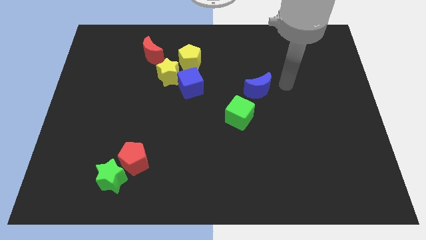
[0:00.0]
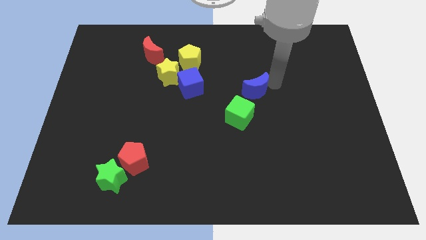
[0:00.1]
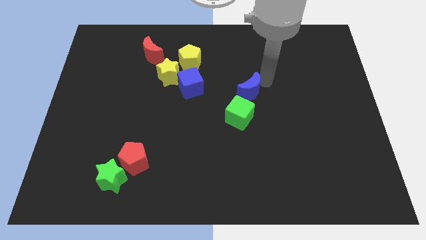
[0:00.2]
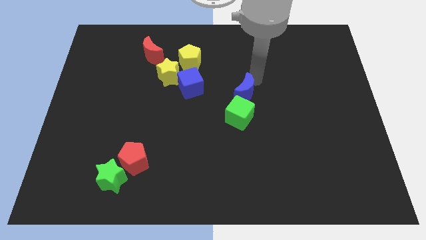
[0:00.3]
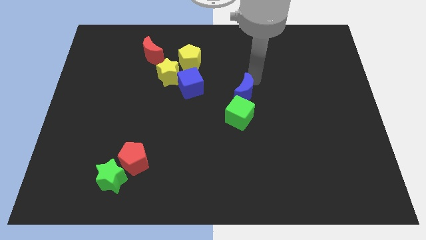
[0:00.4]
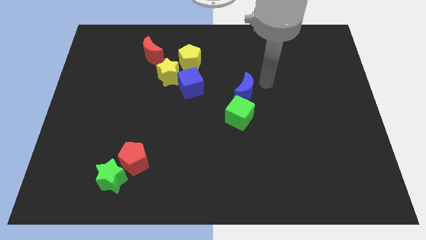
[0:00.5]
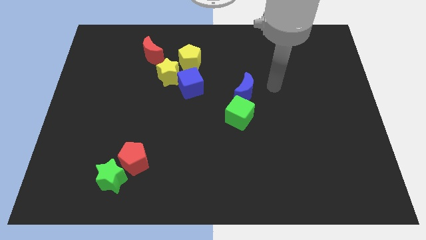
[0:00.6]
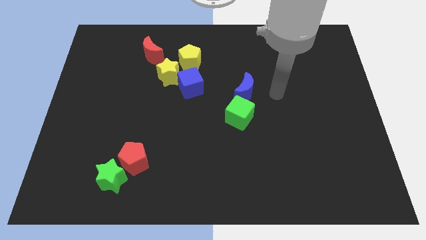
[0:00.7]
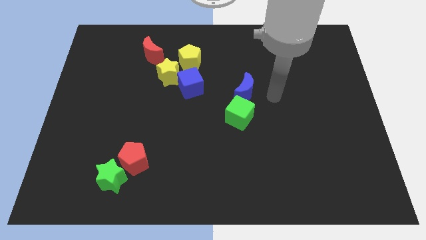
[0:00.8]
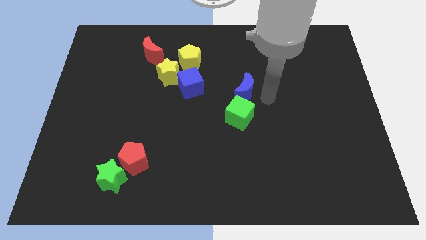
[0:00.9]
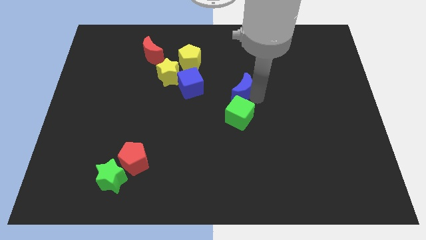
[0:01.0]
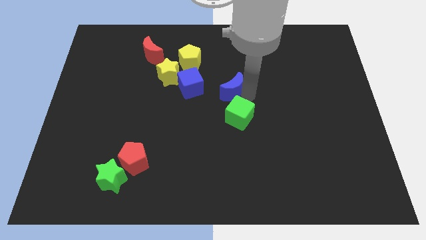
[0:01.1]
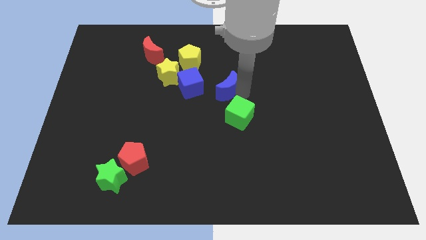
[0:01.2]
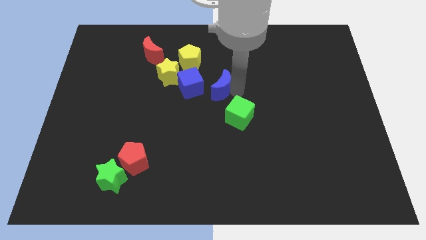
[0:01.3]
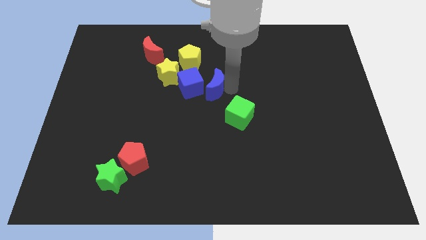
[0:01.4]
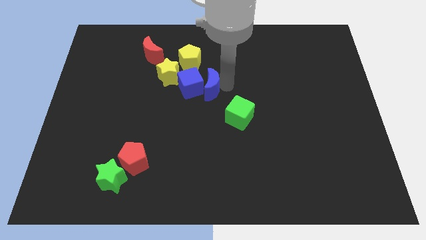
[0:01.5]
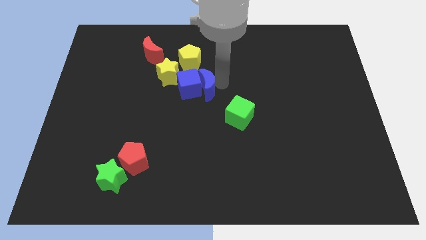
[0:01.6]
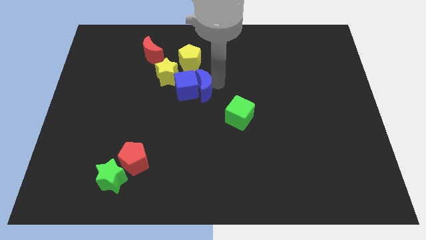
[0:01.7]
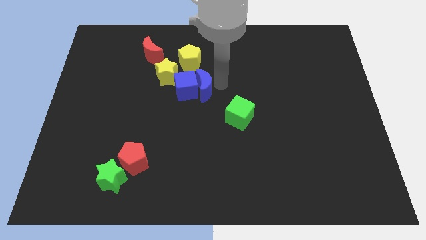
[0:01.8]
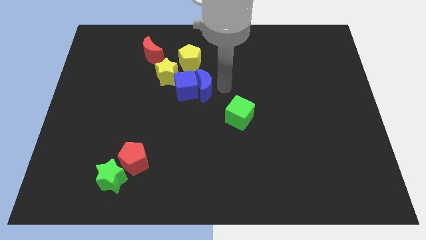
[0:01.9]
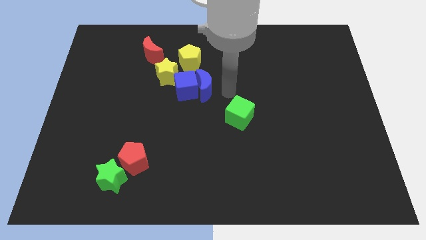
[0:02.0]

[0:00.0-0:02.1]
push blue moon close to the blue cube

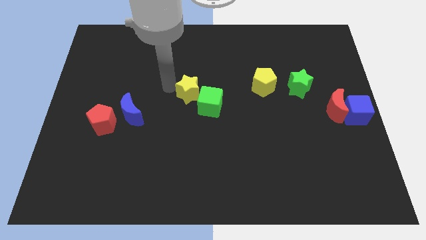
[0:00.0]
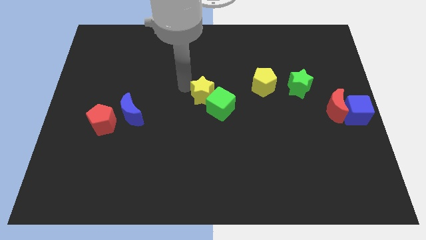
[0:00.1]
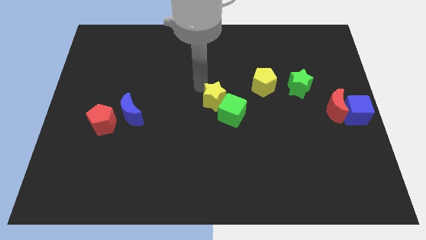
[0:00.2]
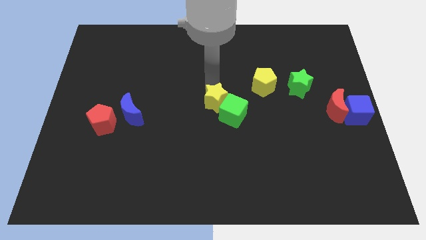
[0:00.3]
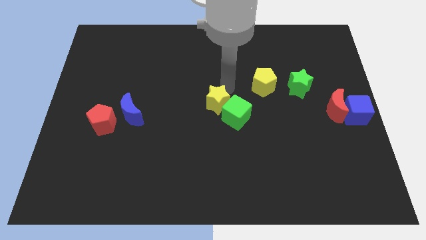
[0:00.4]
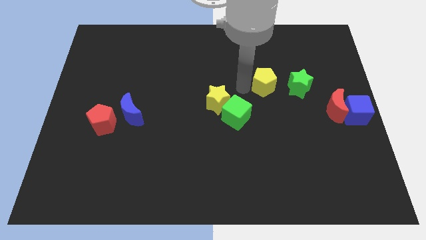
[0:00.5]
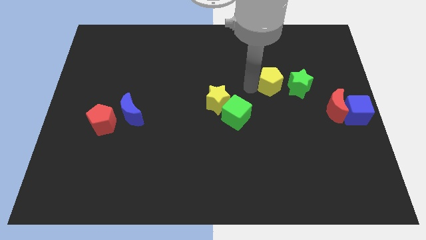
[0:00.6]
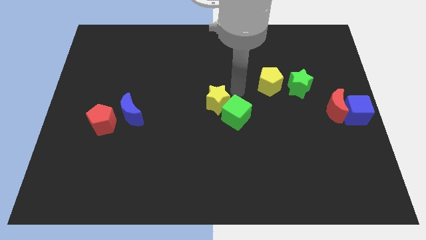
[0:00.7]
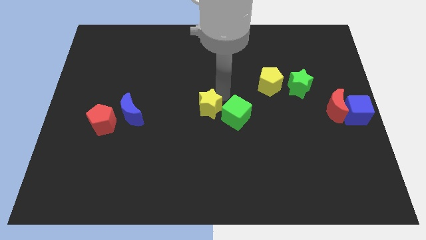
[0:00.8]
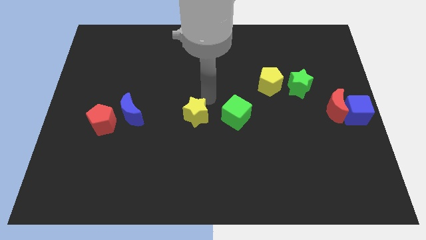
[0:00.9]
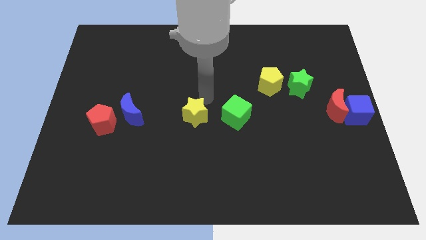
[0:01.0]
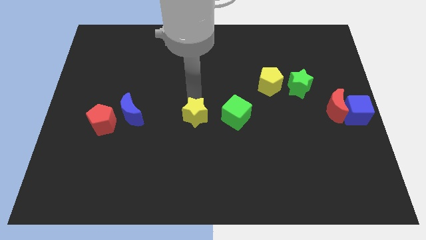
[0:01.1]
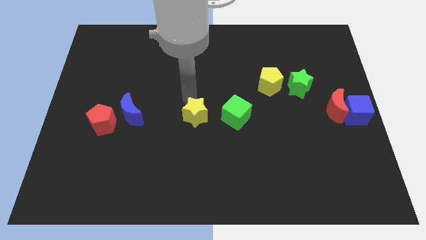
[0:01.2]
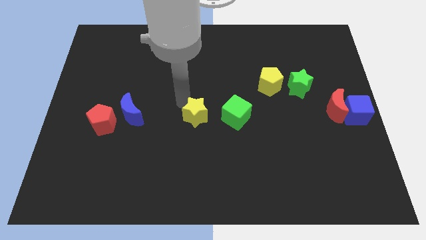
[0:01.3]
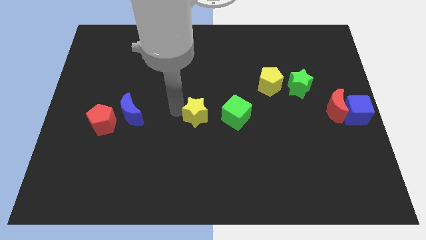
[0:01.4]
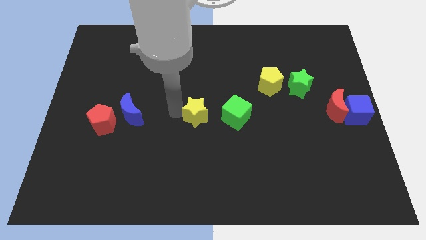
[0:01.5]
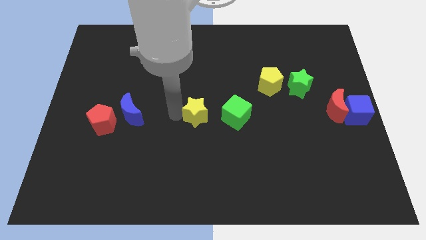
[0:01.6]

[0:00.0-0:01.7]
separate yellow star from green cube

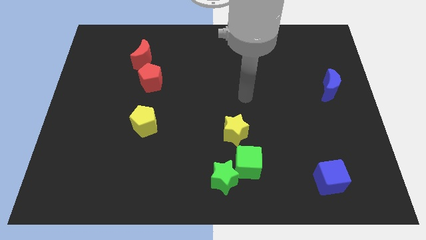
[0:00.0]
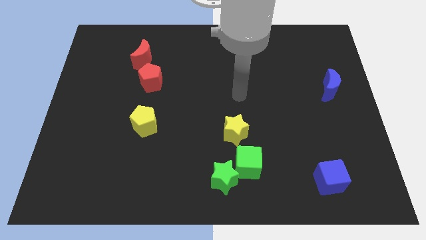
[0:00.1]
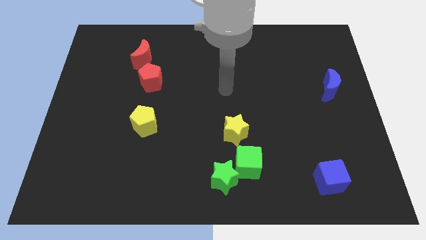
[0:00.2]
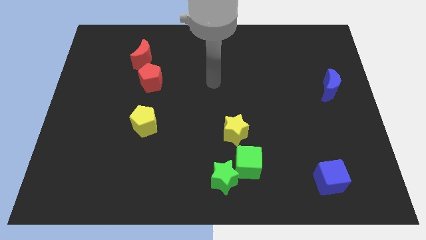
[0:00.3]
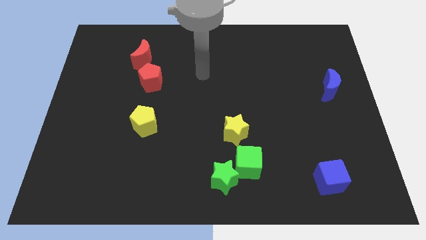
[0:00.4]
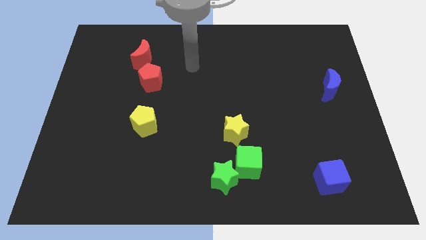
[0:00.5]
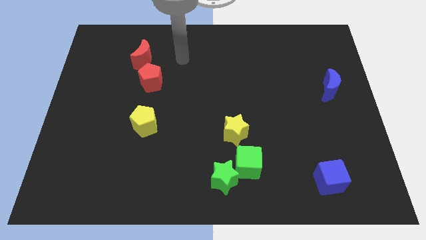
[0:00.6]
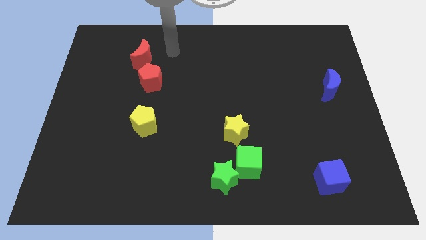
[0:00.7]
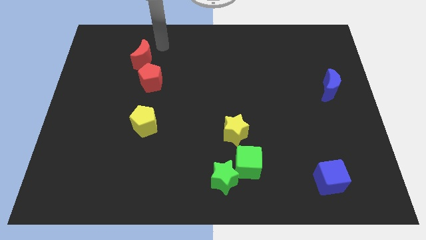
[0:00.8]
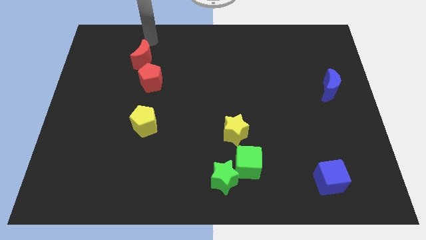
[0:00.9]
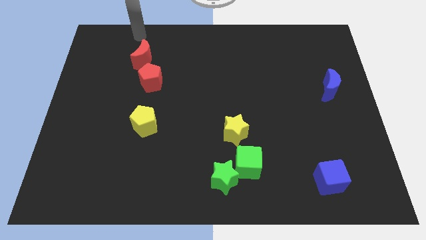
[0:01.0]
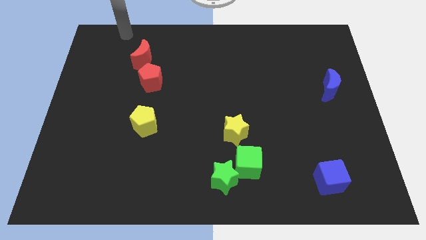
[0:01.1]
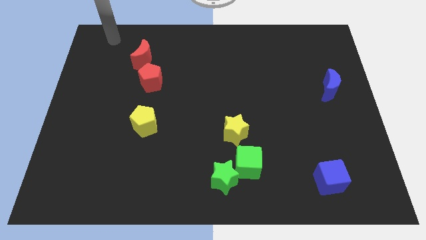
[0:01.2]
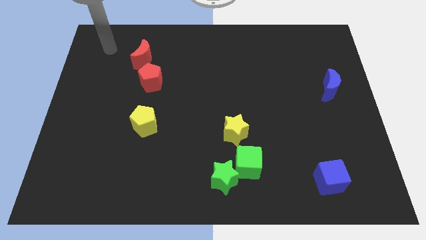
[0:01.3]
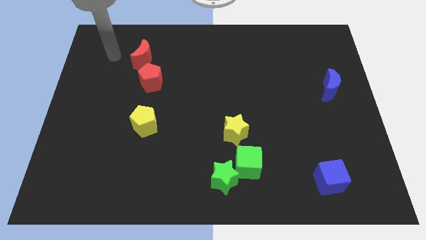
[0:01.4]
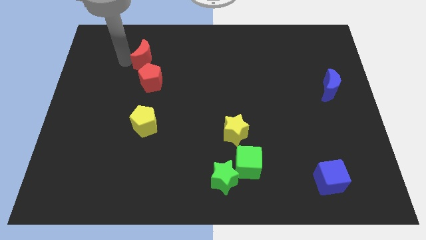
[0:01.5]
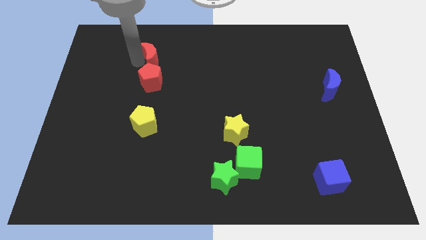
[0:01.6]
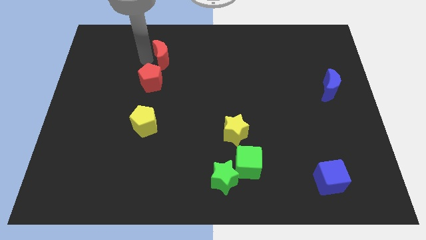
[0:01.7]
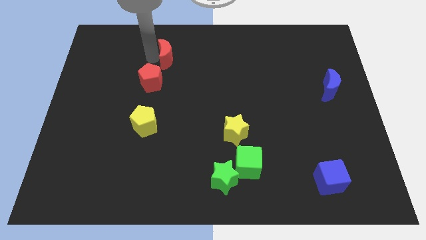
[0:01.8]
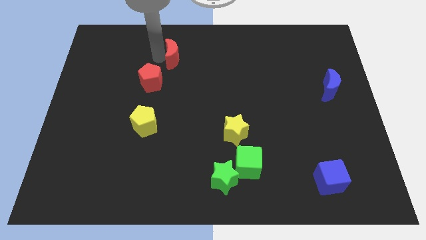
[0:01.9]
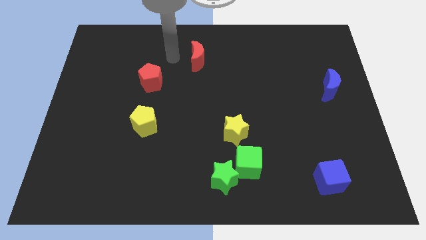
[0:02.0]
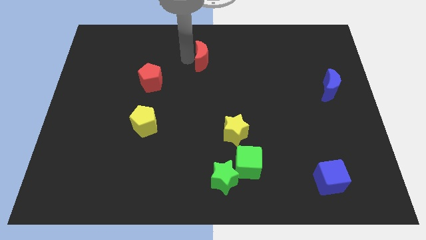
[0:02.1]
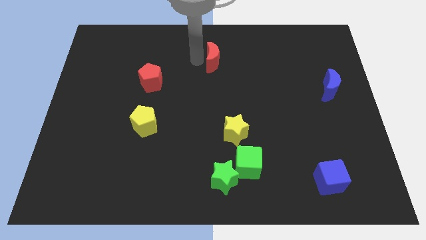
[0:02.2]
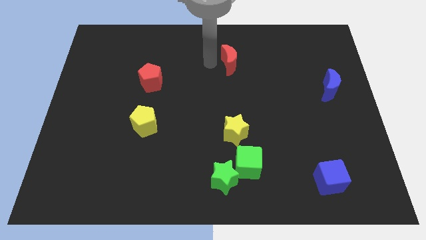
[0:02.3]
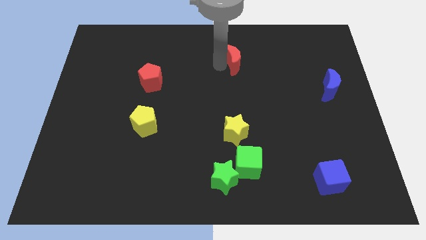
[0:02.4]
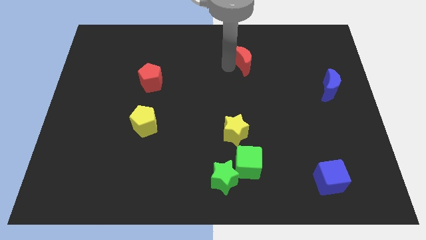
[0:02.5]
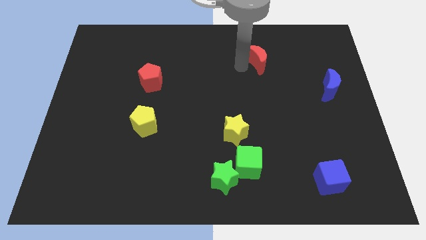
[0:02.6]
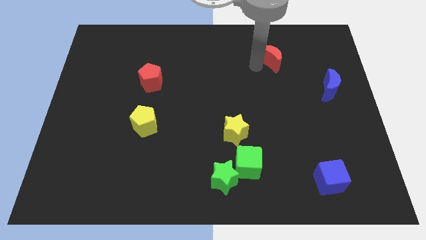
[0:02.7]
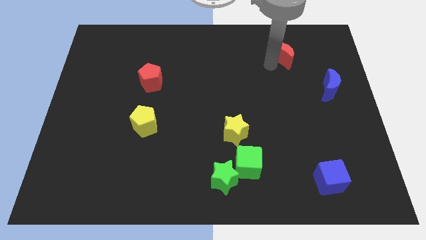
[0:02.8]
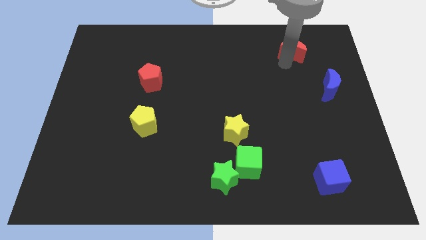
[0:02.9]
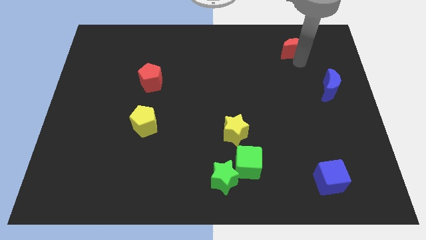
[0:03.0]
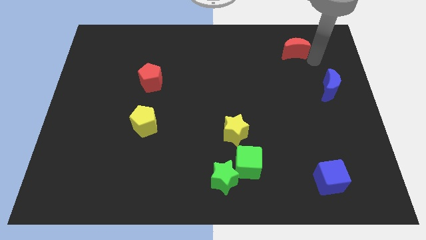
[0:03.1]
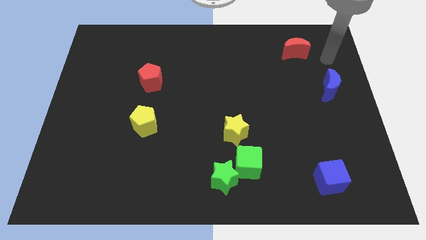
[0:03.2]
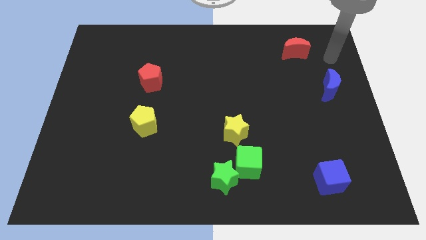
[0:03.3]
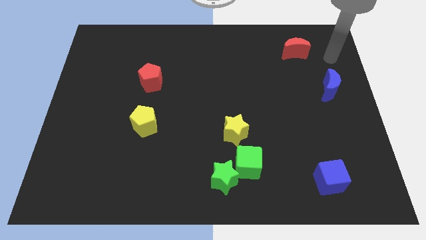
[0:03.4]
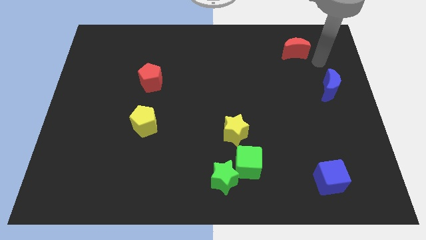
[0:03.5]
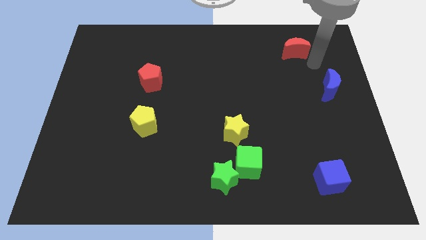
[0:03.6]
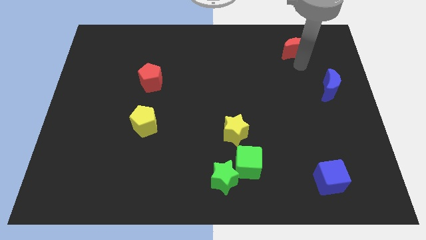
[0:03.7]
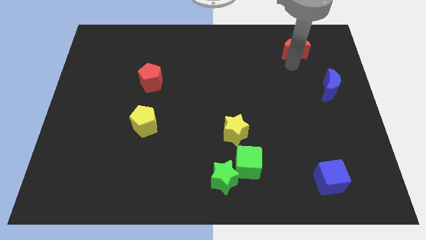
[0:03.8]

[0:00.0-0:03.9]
drag red pentagon towards right side of the board

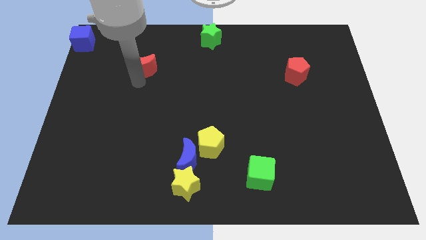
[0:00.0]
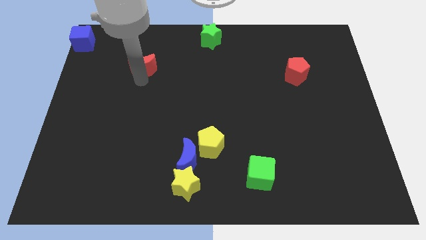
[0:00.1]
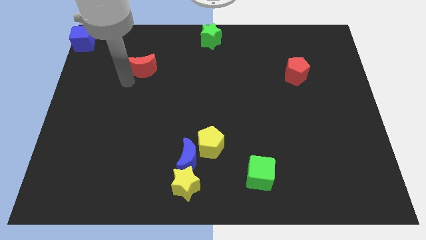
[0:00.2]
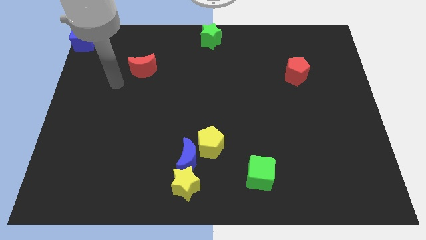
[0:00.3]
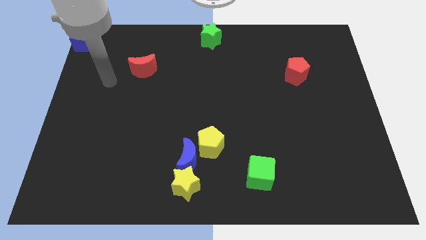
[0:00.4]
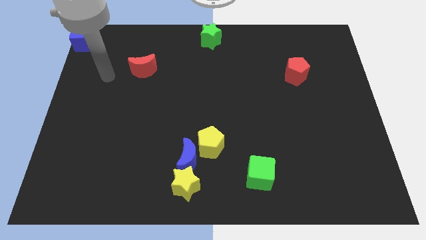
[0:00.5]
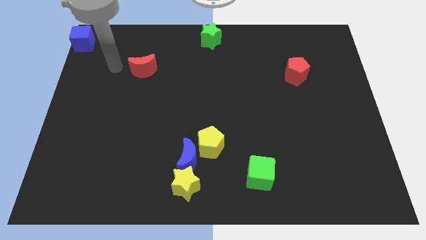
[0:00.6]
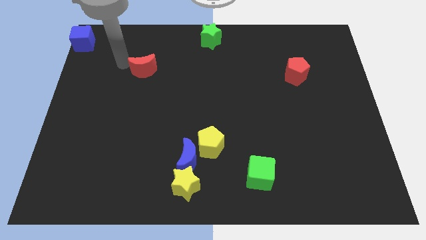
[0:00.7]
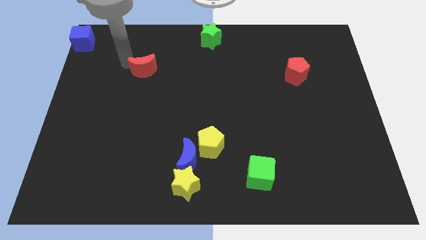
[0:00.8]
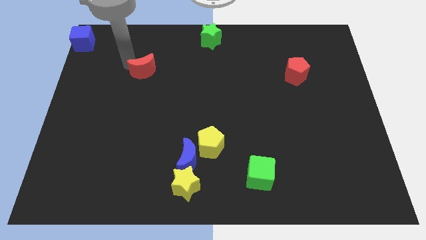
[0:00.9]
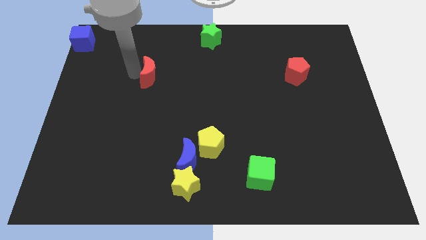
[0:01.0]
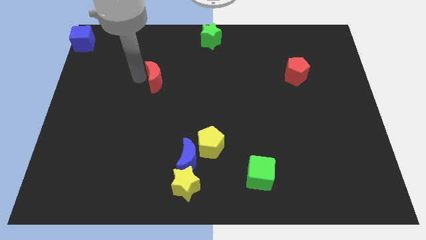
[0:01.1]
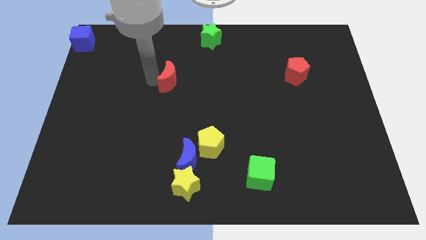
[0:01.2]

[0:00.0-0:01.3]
put the red crescent to the left of the red pentagon

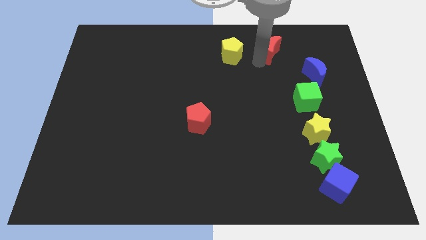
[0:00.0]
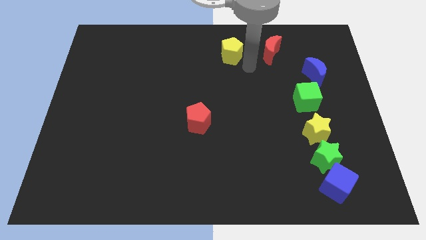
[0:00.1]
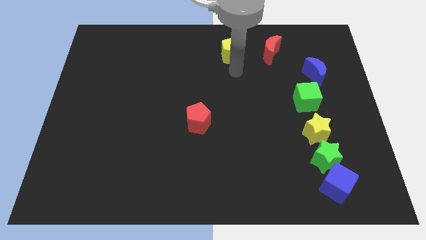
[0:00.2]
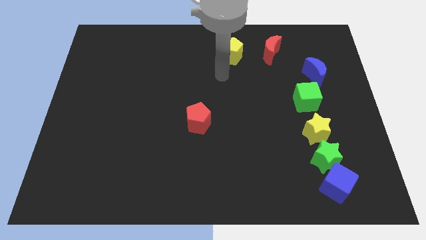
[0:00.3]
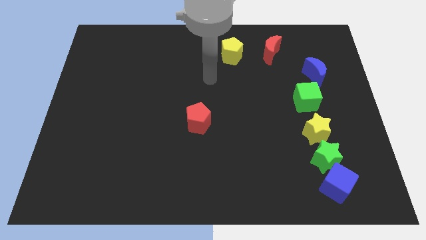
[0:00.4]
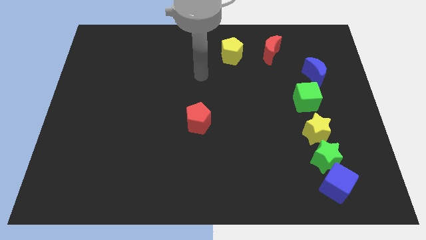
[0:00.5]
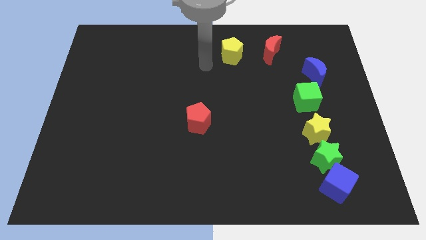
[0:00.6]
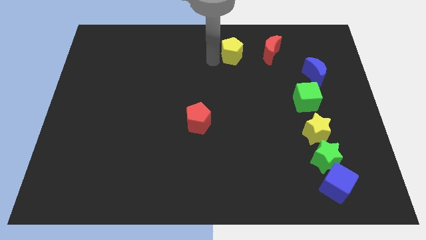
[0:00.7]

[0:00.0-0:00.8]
point your arm to the bottom side of the yellow pentagon
